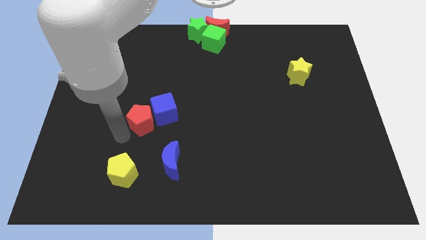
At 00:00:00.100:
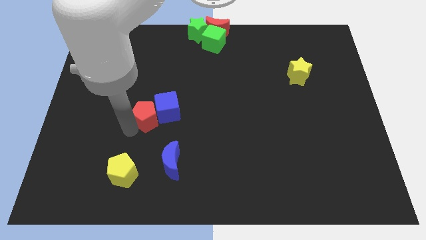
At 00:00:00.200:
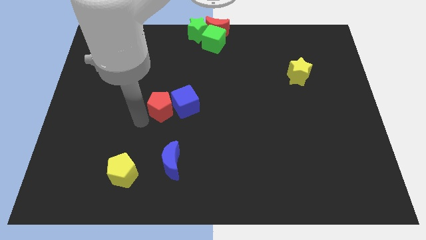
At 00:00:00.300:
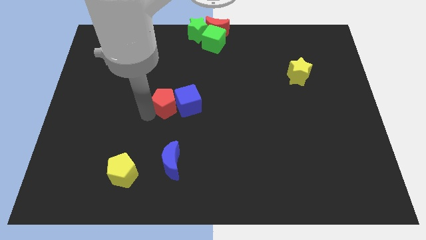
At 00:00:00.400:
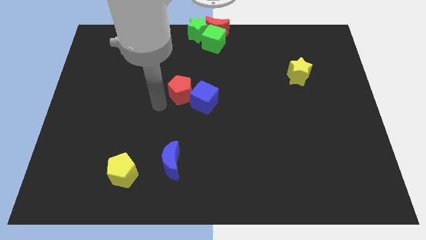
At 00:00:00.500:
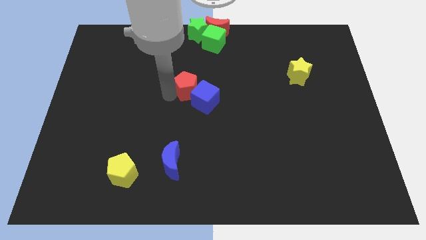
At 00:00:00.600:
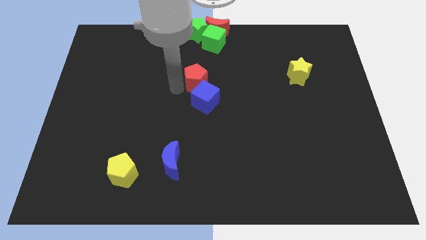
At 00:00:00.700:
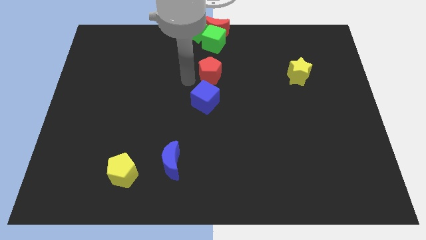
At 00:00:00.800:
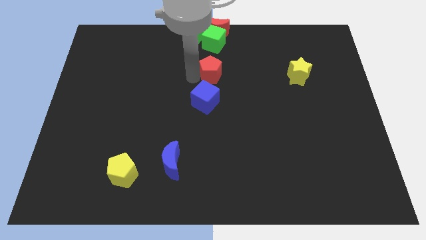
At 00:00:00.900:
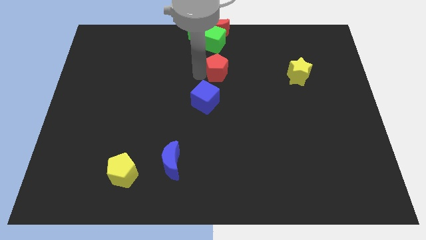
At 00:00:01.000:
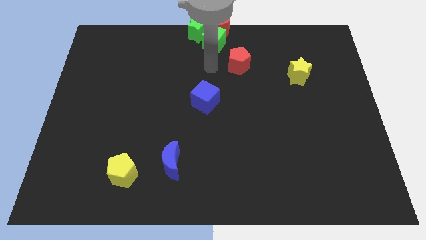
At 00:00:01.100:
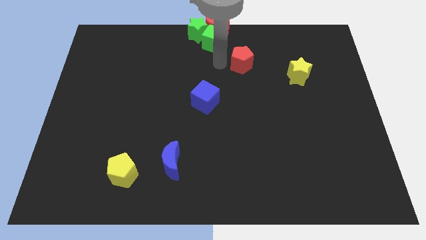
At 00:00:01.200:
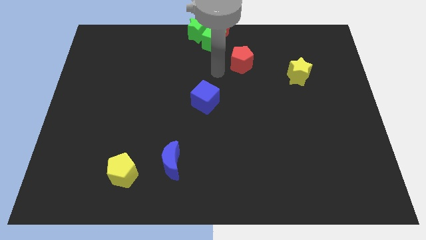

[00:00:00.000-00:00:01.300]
move the red pentagon away from the blue cube

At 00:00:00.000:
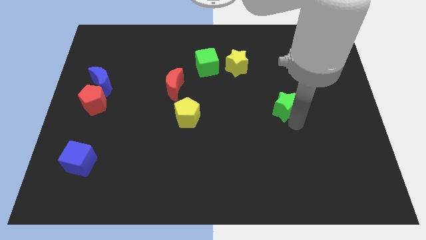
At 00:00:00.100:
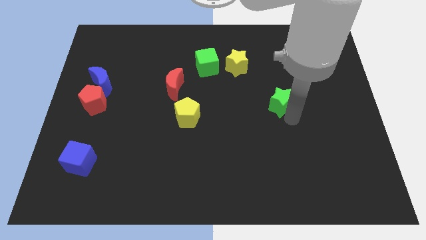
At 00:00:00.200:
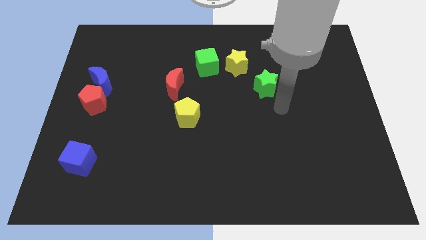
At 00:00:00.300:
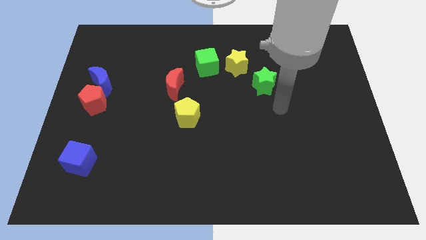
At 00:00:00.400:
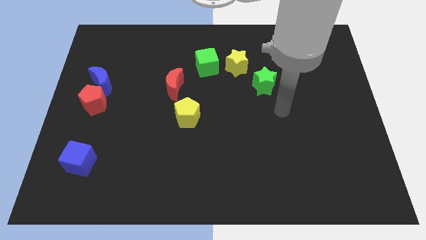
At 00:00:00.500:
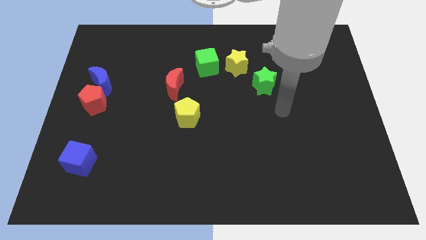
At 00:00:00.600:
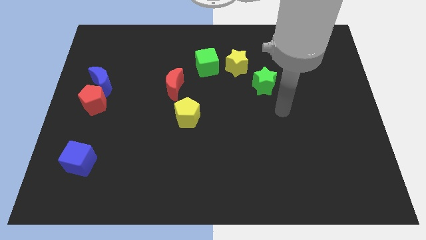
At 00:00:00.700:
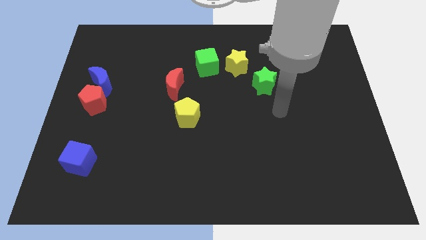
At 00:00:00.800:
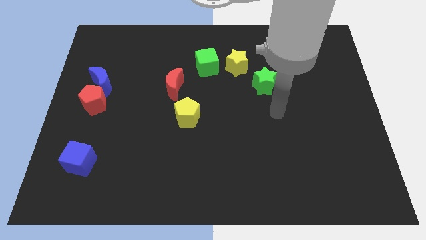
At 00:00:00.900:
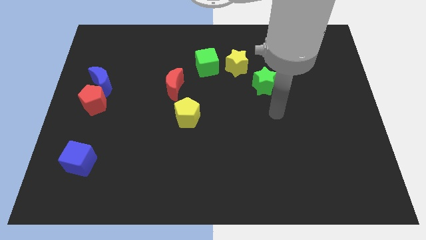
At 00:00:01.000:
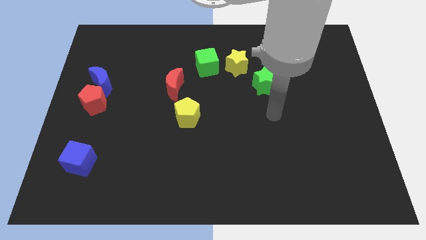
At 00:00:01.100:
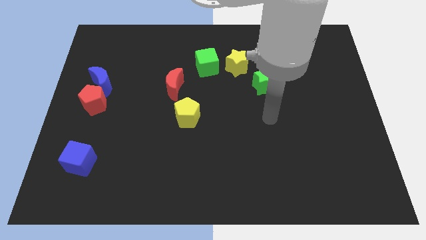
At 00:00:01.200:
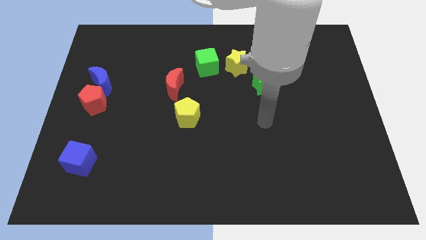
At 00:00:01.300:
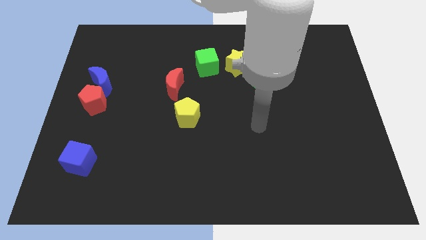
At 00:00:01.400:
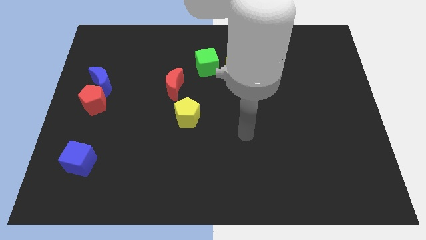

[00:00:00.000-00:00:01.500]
place the green star to the bottom right side of the yellow star

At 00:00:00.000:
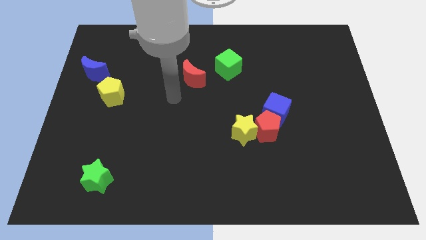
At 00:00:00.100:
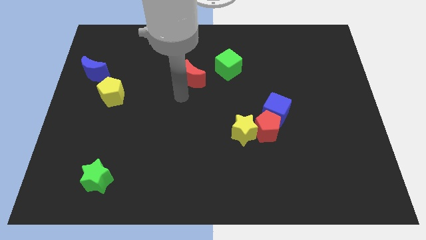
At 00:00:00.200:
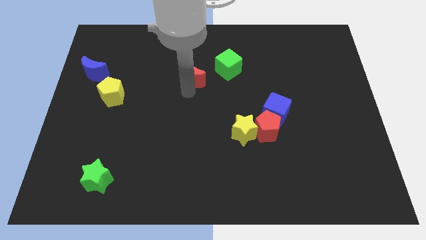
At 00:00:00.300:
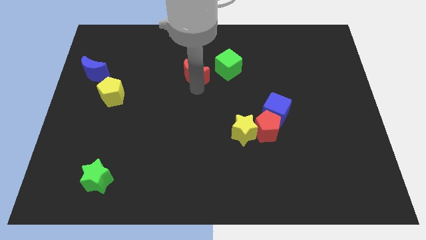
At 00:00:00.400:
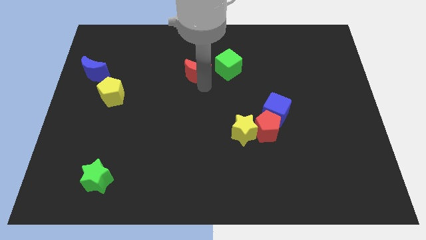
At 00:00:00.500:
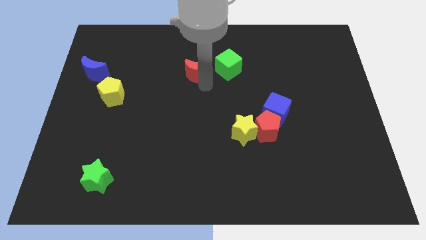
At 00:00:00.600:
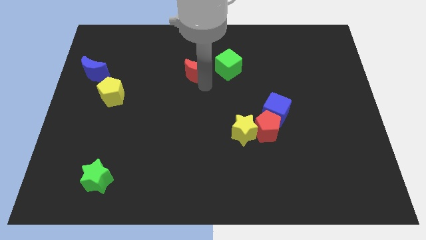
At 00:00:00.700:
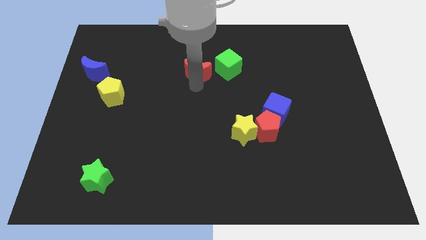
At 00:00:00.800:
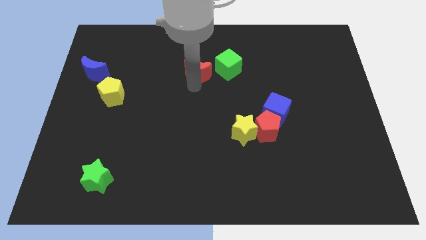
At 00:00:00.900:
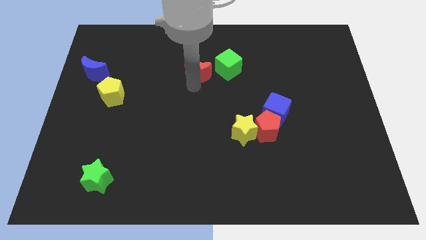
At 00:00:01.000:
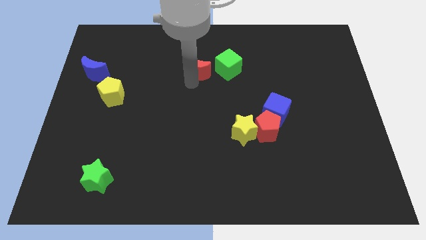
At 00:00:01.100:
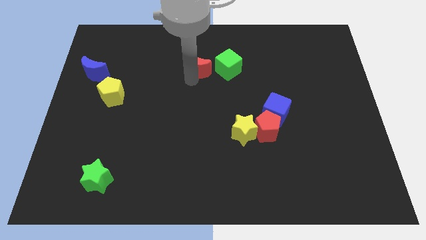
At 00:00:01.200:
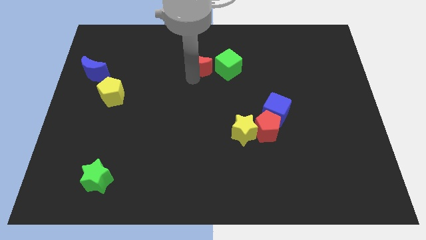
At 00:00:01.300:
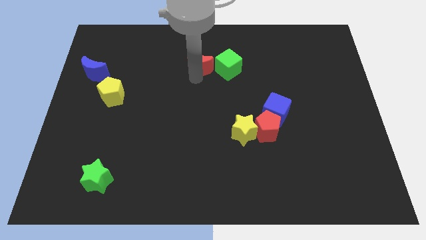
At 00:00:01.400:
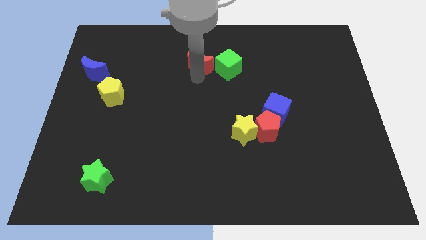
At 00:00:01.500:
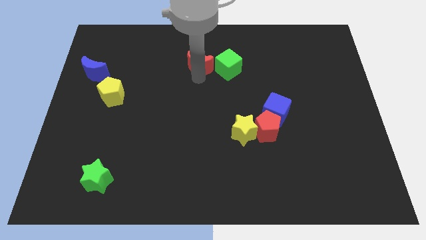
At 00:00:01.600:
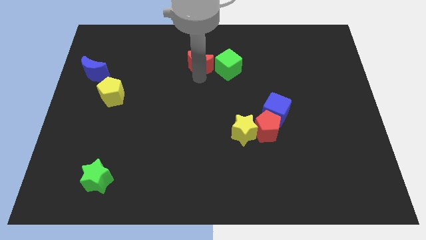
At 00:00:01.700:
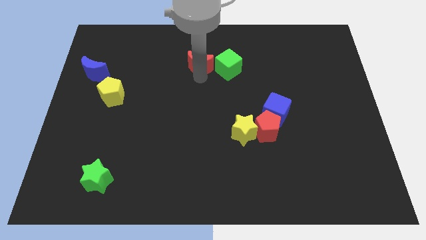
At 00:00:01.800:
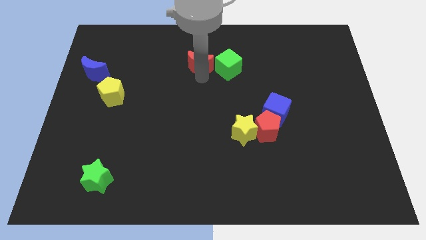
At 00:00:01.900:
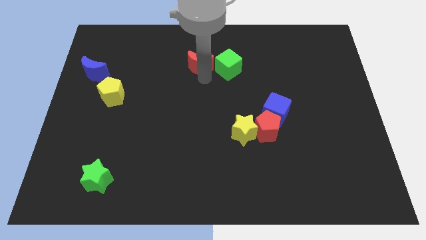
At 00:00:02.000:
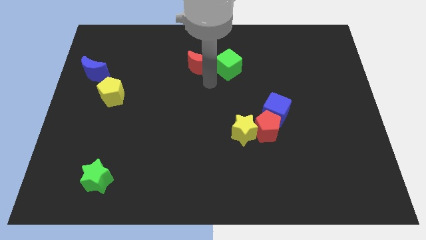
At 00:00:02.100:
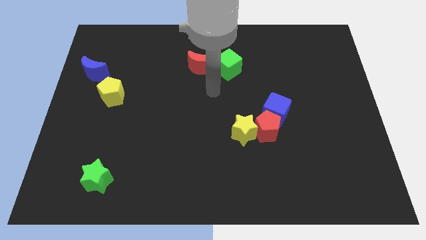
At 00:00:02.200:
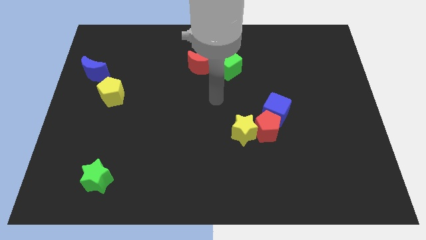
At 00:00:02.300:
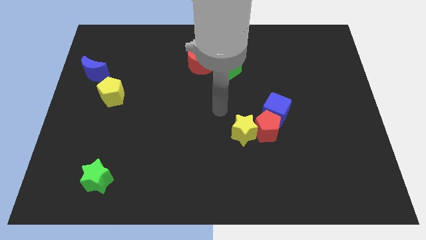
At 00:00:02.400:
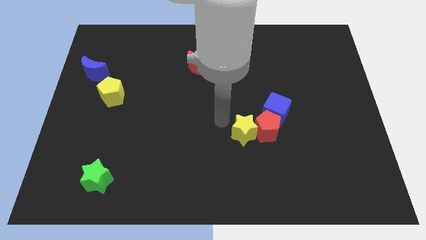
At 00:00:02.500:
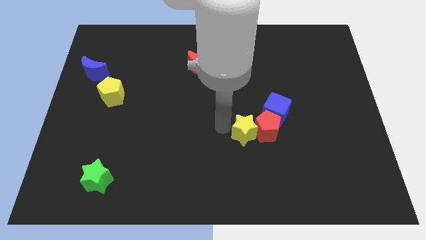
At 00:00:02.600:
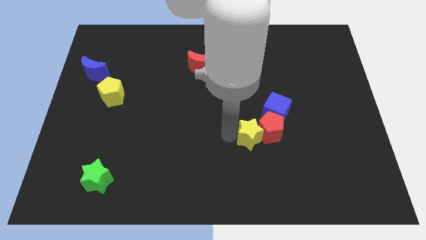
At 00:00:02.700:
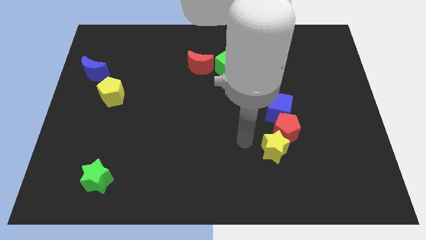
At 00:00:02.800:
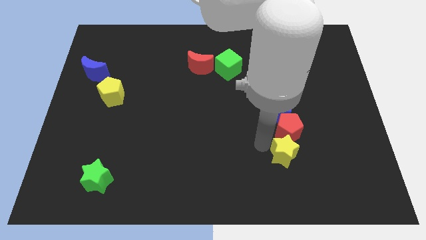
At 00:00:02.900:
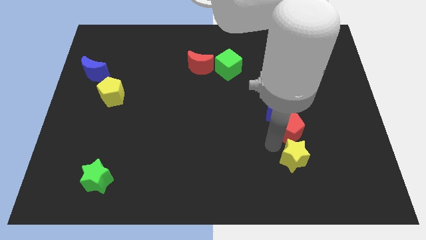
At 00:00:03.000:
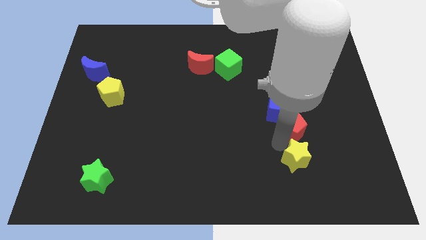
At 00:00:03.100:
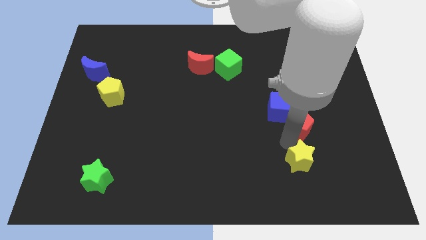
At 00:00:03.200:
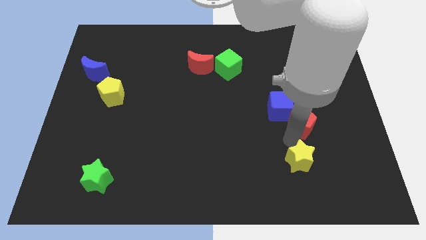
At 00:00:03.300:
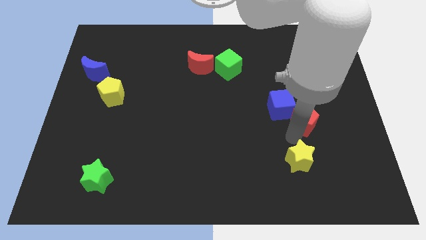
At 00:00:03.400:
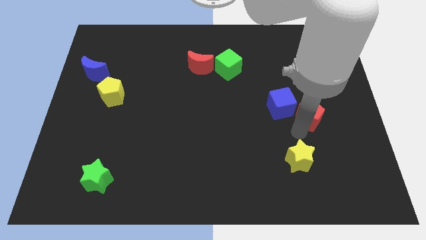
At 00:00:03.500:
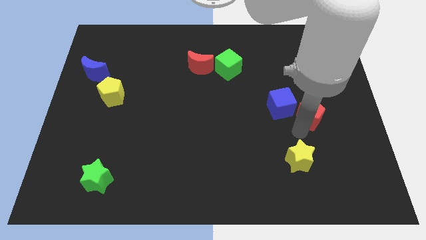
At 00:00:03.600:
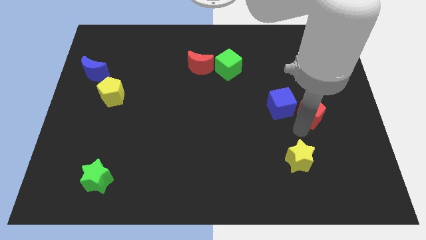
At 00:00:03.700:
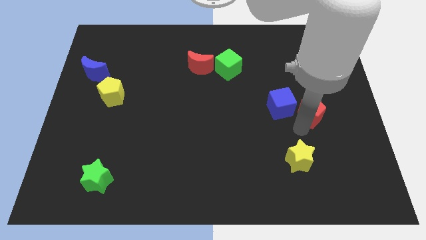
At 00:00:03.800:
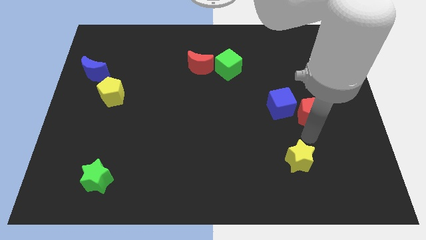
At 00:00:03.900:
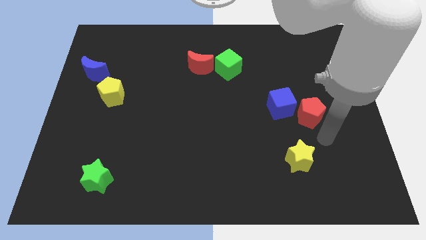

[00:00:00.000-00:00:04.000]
separate the red pentagon and yellow star

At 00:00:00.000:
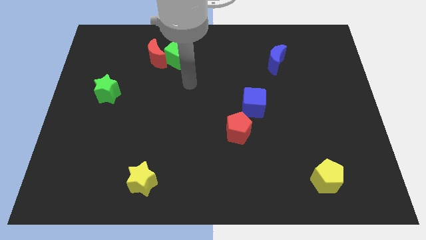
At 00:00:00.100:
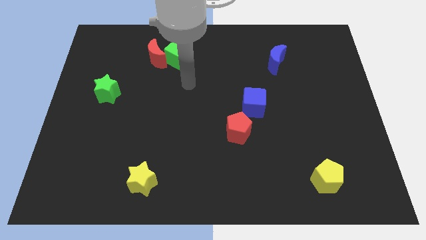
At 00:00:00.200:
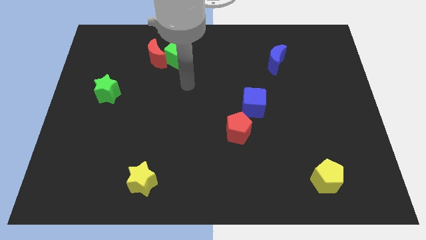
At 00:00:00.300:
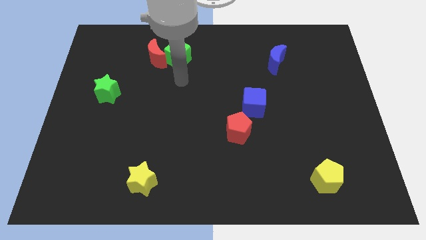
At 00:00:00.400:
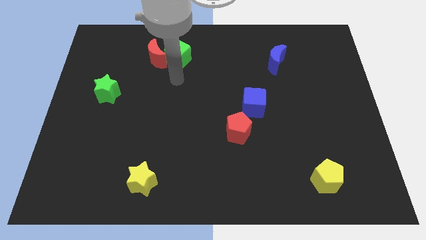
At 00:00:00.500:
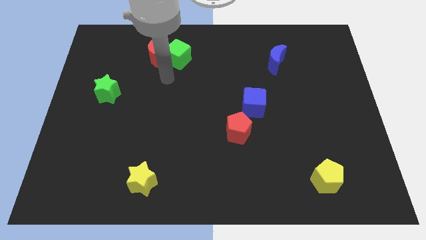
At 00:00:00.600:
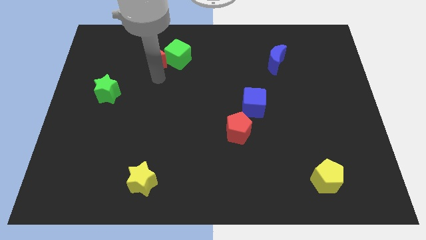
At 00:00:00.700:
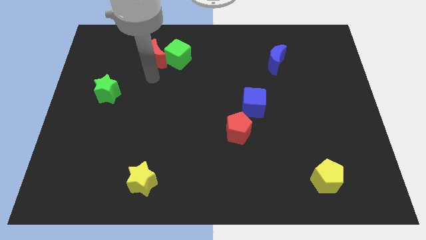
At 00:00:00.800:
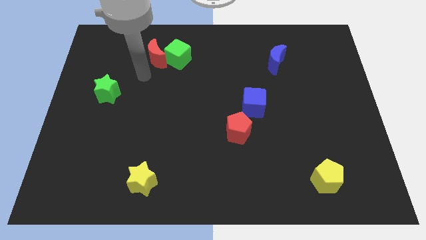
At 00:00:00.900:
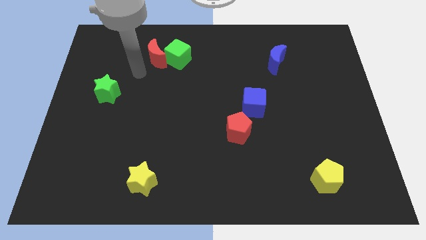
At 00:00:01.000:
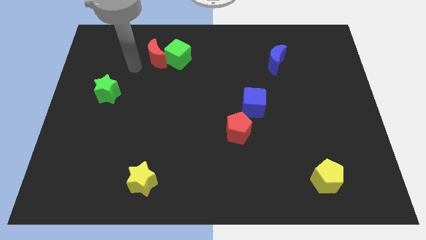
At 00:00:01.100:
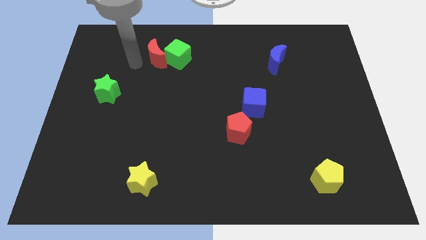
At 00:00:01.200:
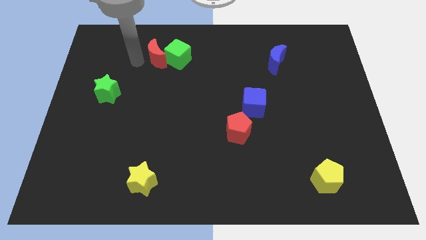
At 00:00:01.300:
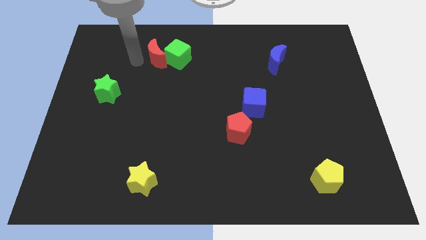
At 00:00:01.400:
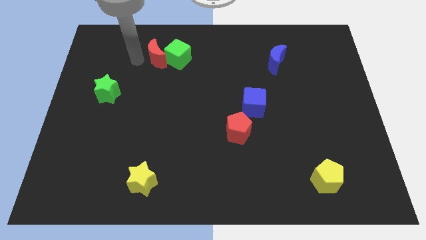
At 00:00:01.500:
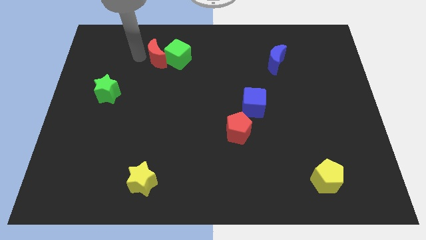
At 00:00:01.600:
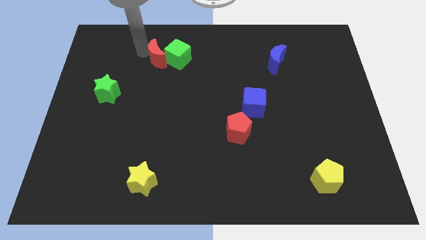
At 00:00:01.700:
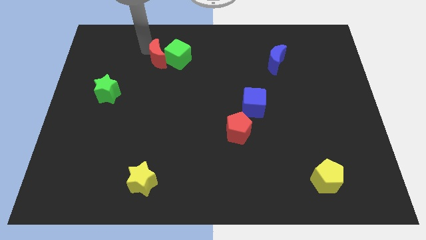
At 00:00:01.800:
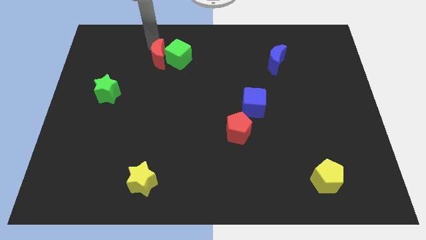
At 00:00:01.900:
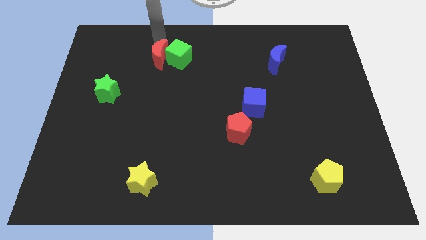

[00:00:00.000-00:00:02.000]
move the arm towards the red crescent
